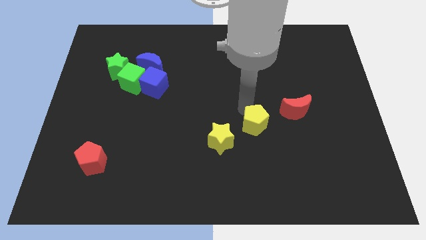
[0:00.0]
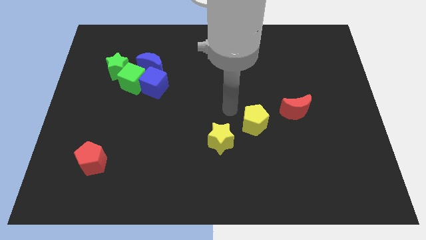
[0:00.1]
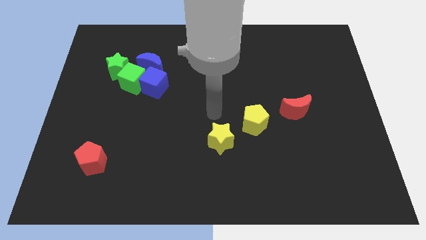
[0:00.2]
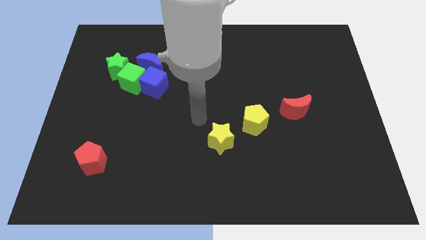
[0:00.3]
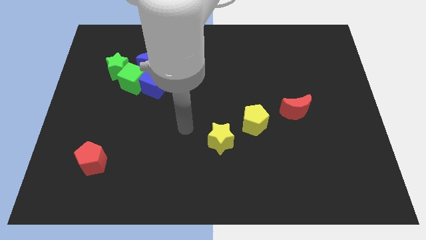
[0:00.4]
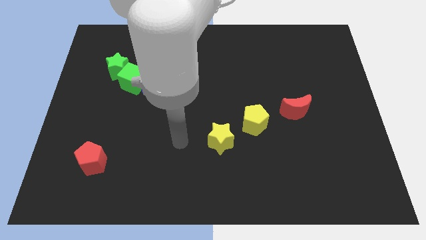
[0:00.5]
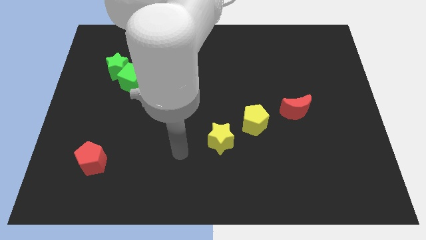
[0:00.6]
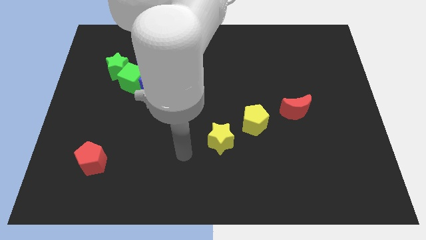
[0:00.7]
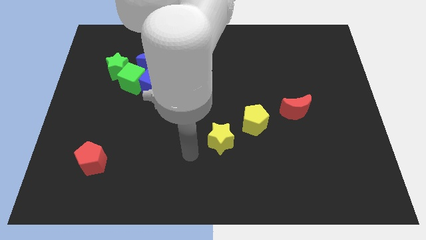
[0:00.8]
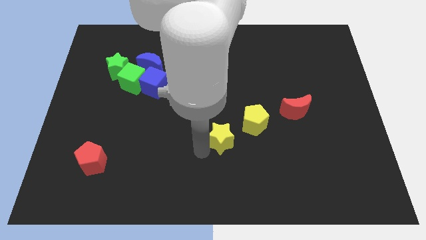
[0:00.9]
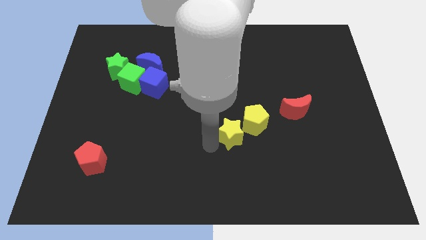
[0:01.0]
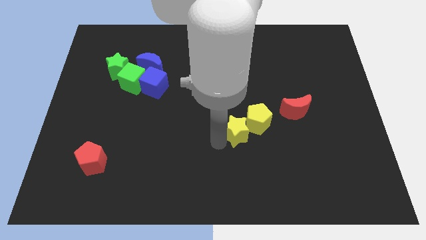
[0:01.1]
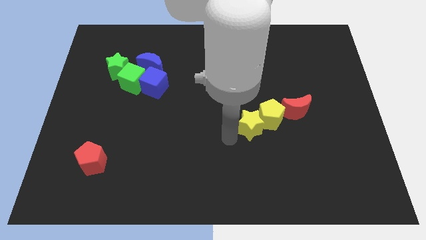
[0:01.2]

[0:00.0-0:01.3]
push the yellow star into the yellow pentagon

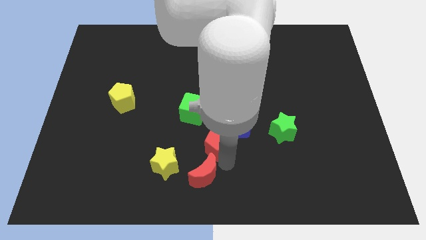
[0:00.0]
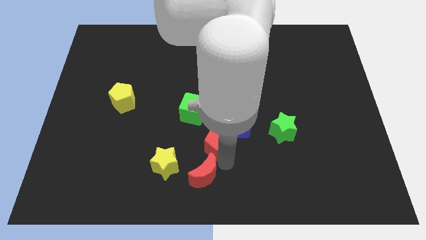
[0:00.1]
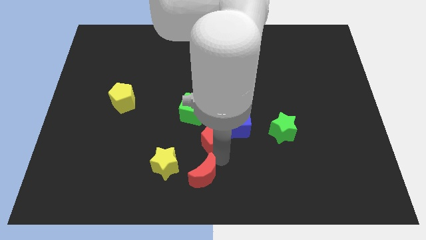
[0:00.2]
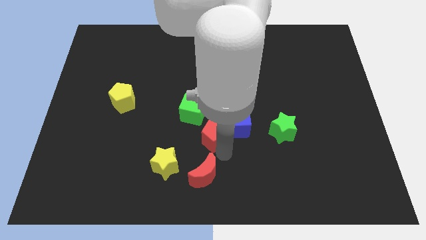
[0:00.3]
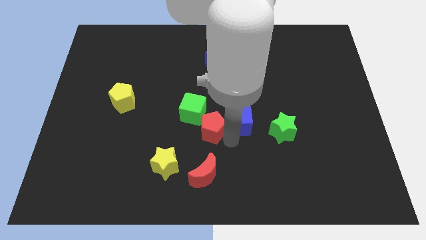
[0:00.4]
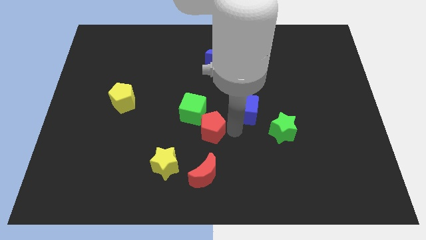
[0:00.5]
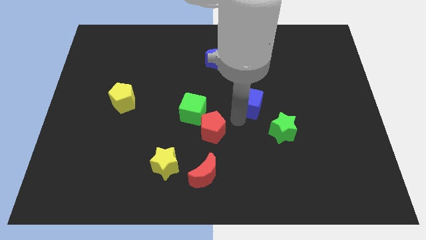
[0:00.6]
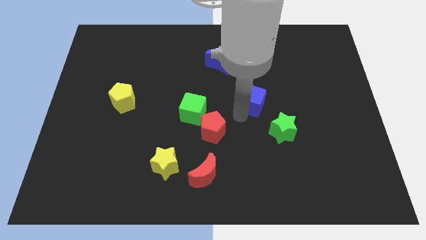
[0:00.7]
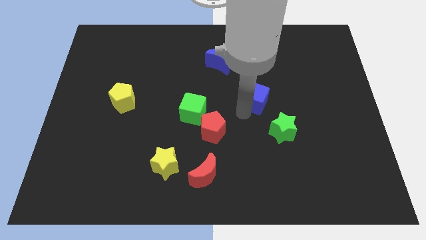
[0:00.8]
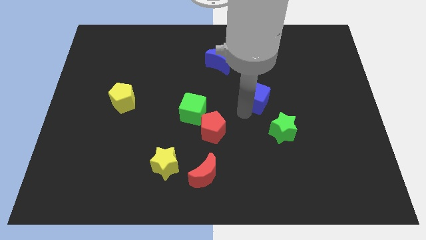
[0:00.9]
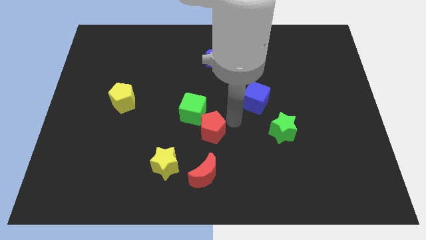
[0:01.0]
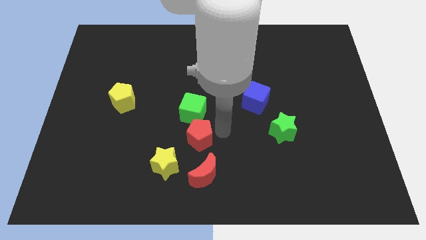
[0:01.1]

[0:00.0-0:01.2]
separate the red pentagon and blue cube

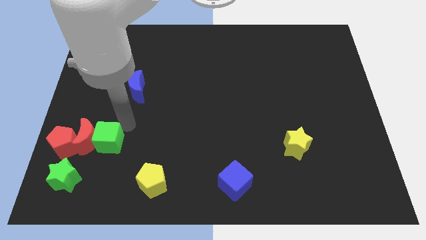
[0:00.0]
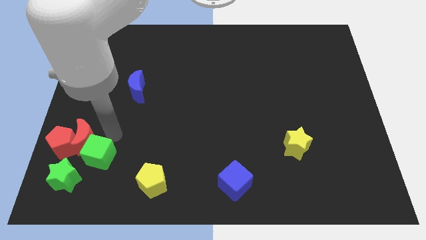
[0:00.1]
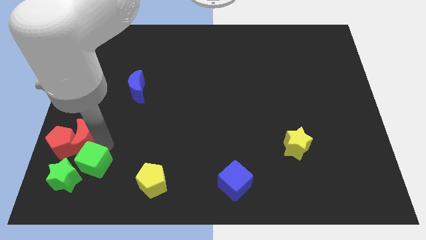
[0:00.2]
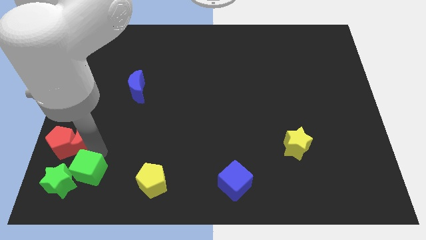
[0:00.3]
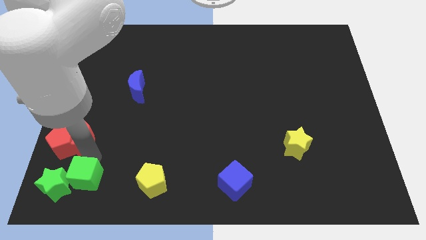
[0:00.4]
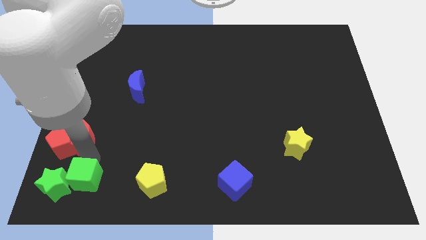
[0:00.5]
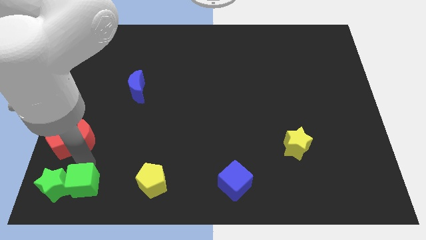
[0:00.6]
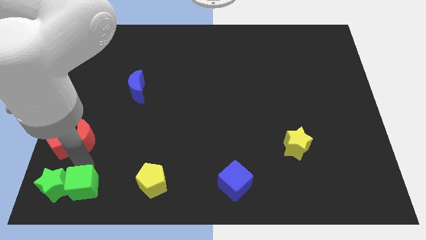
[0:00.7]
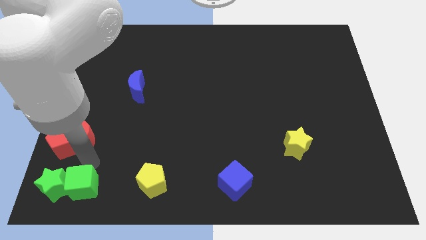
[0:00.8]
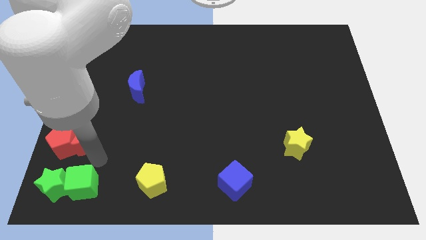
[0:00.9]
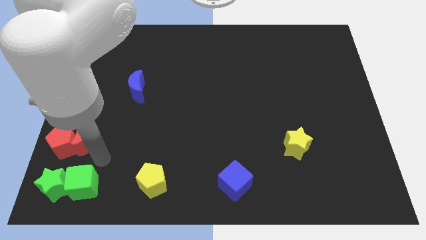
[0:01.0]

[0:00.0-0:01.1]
move the green cube into the green star

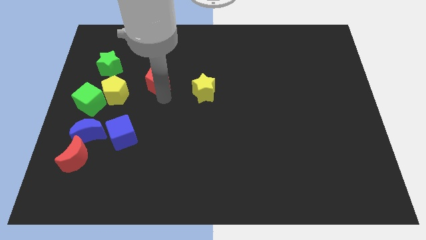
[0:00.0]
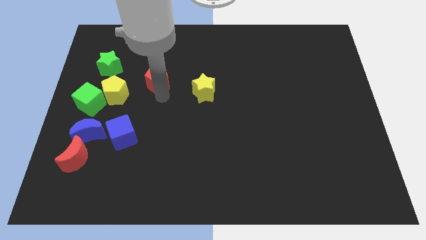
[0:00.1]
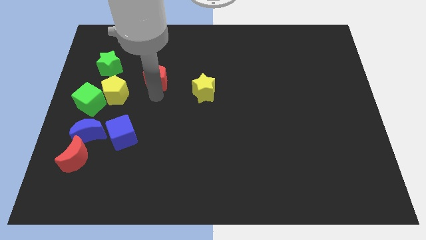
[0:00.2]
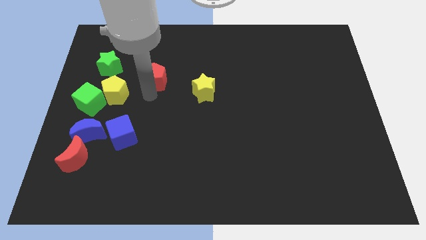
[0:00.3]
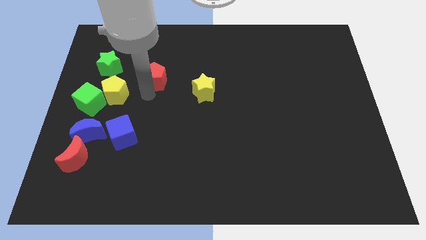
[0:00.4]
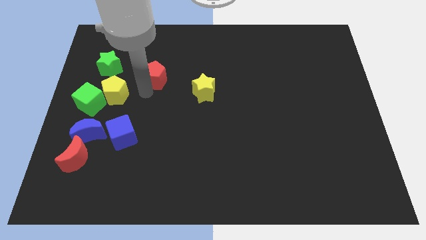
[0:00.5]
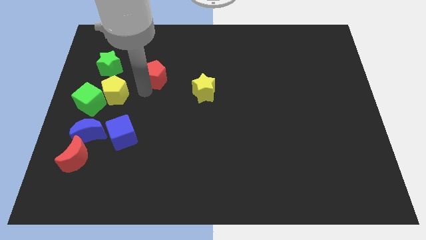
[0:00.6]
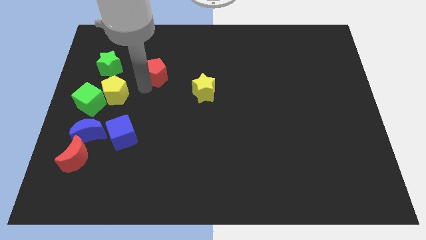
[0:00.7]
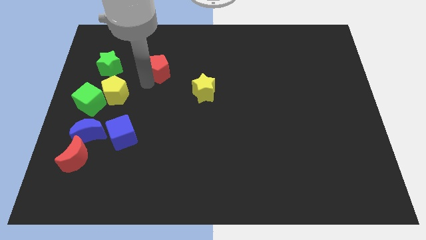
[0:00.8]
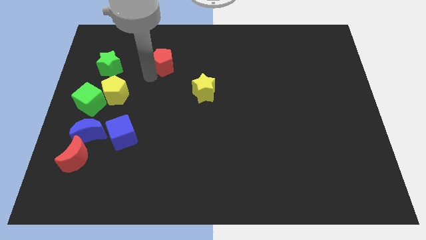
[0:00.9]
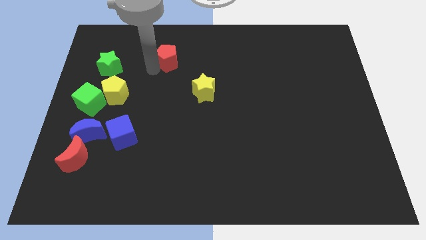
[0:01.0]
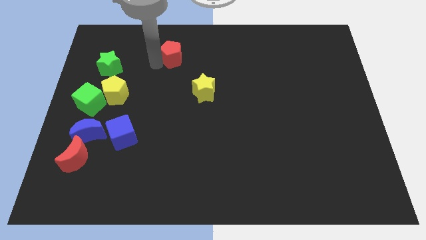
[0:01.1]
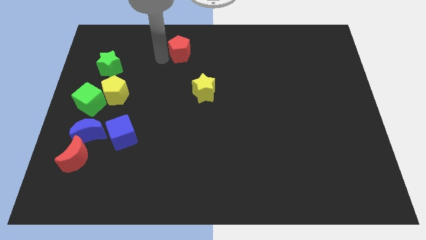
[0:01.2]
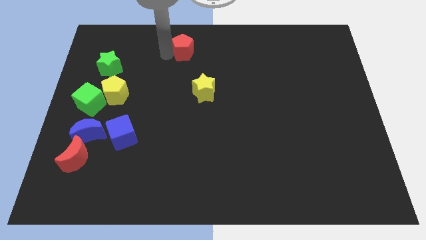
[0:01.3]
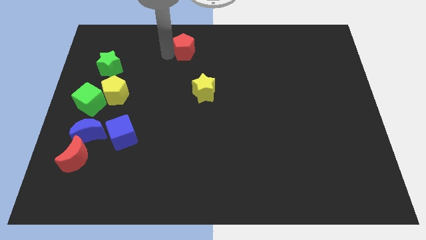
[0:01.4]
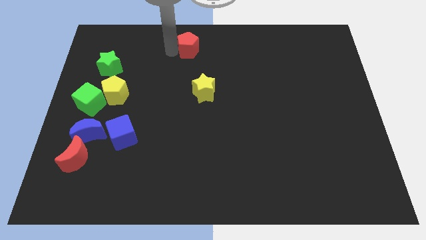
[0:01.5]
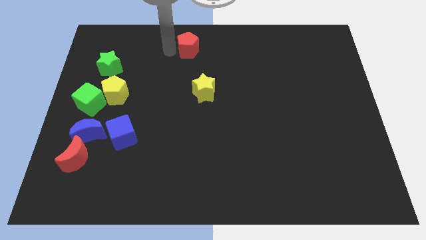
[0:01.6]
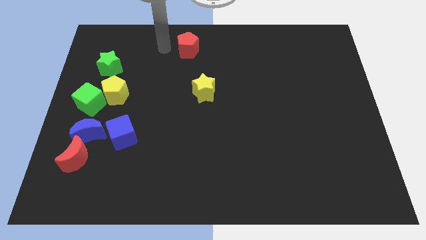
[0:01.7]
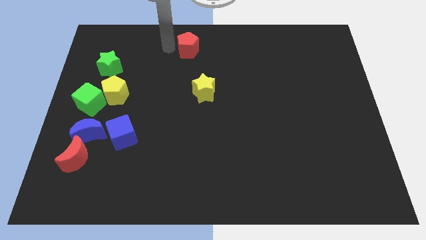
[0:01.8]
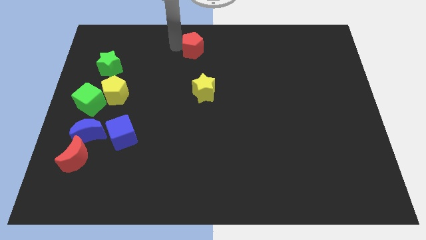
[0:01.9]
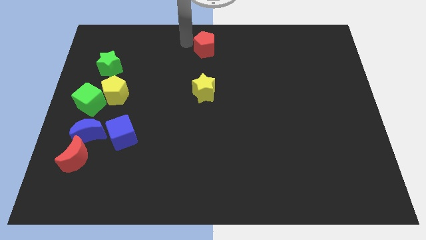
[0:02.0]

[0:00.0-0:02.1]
move the red pentagon to the top of the yellow star

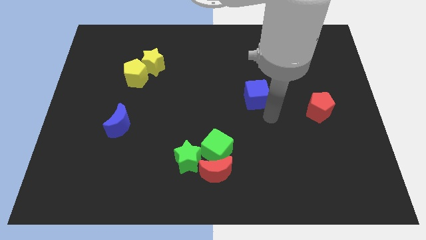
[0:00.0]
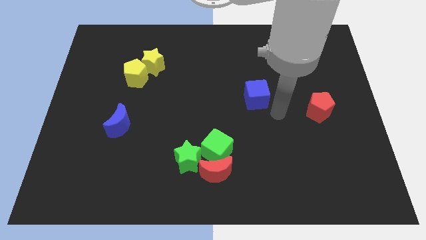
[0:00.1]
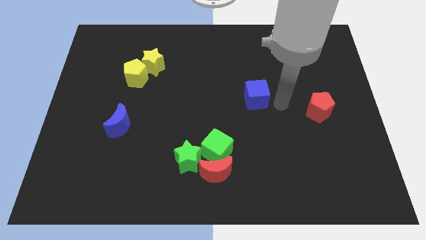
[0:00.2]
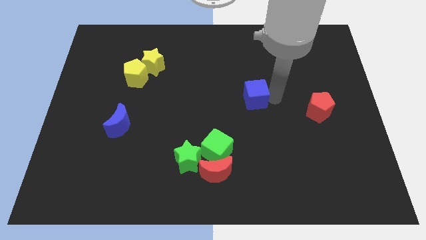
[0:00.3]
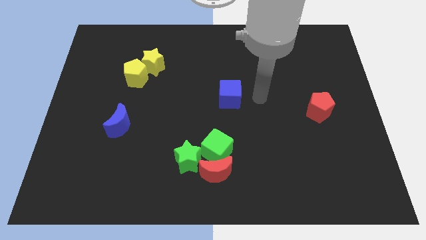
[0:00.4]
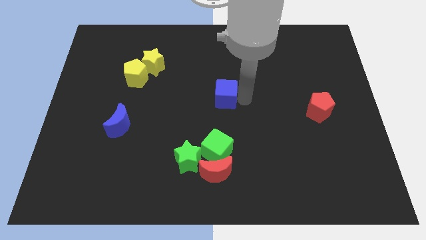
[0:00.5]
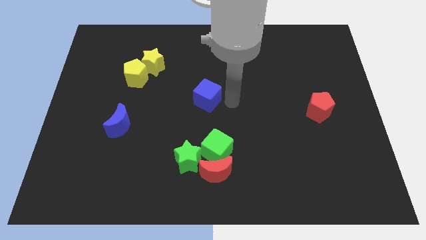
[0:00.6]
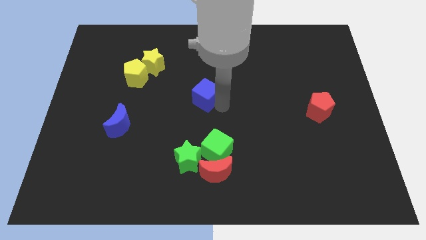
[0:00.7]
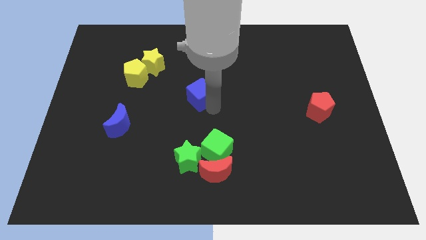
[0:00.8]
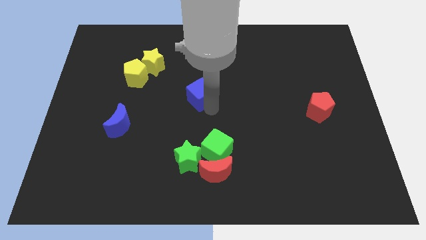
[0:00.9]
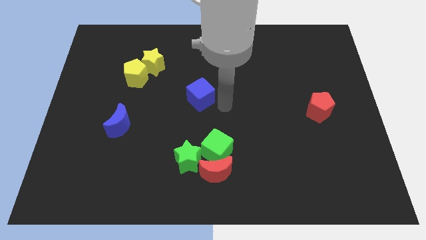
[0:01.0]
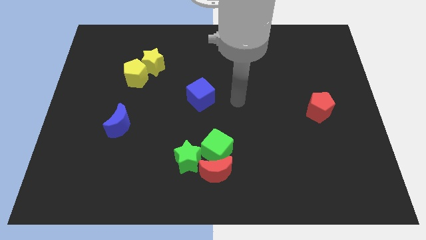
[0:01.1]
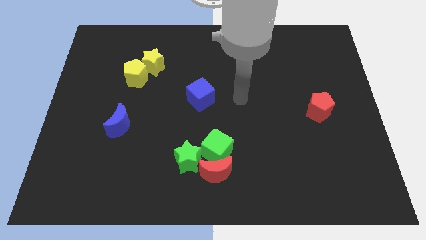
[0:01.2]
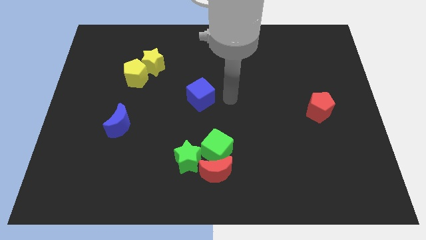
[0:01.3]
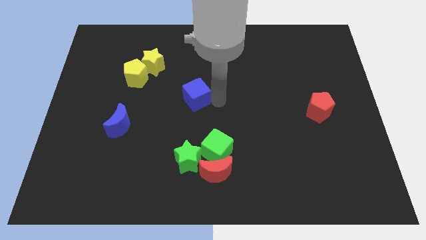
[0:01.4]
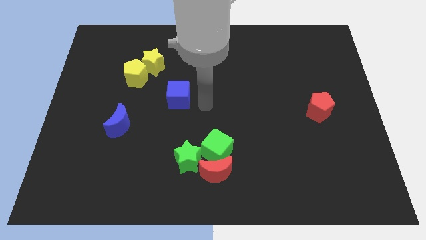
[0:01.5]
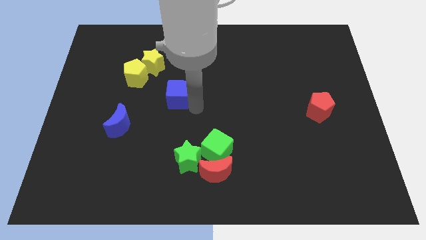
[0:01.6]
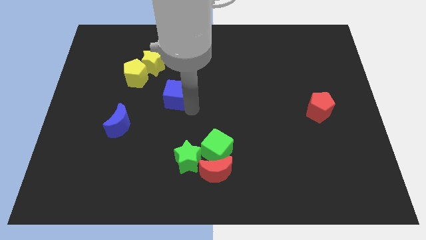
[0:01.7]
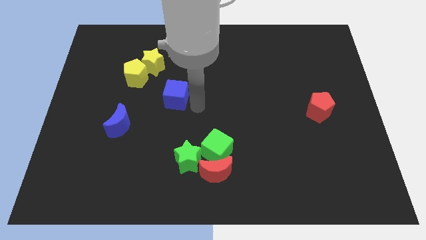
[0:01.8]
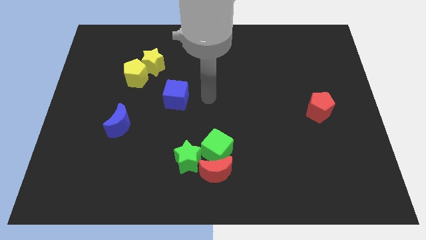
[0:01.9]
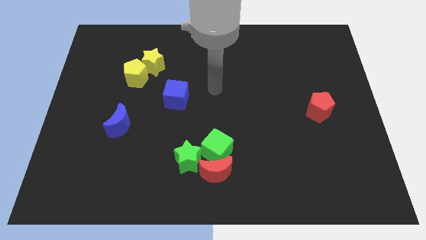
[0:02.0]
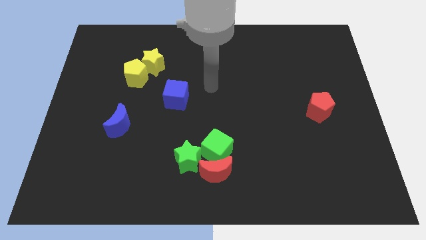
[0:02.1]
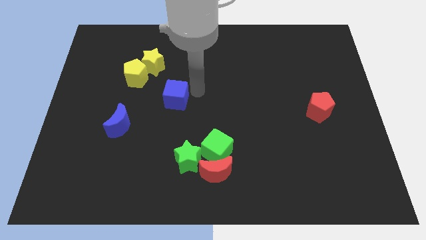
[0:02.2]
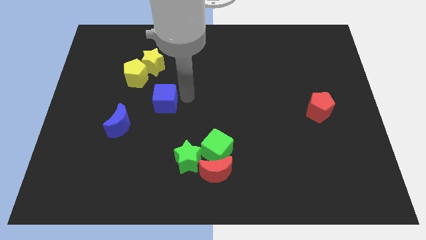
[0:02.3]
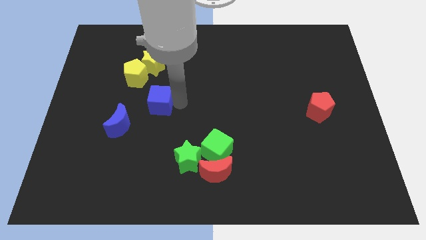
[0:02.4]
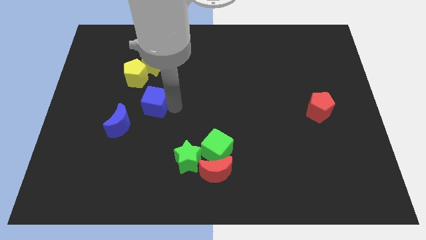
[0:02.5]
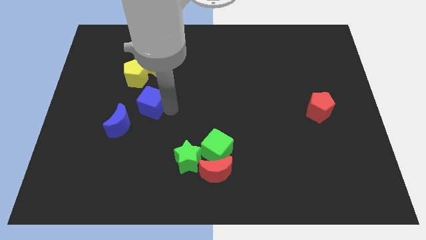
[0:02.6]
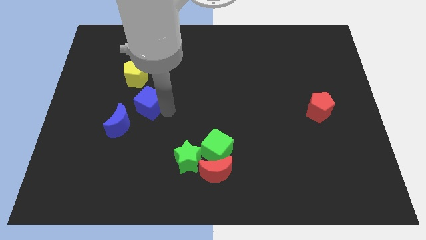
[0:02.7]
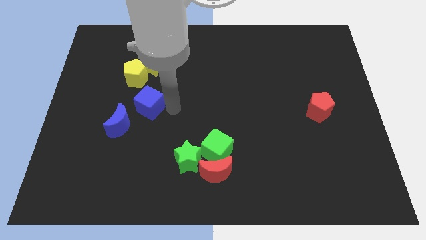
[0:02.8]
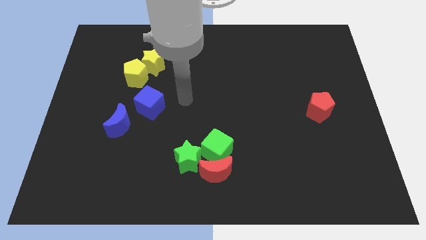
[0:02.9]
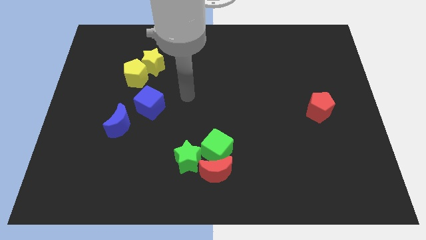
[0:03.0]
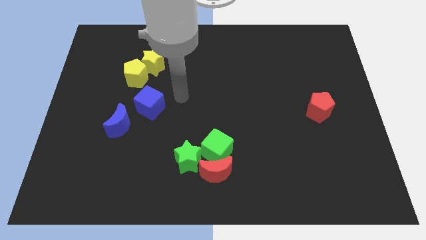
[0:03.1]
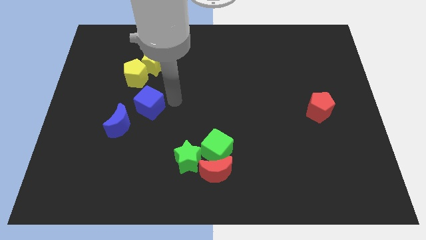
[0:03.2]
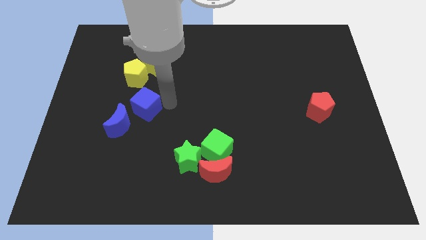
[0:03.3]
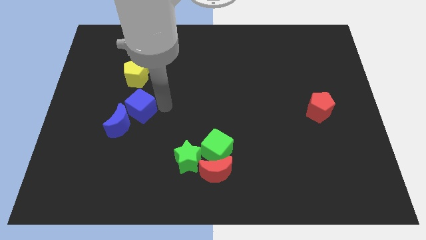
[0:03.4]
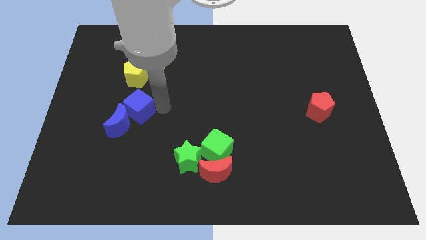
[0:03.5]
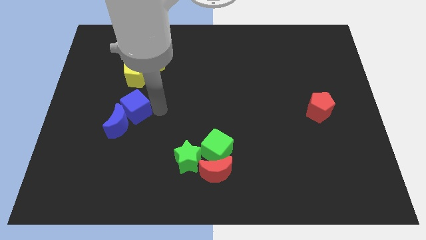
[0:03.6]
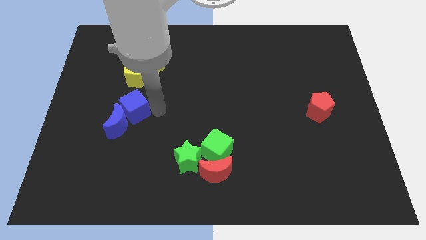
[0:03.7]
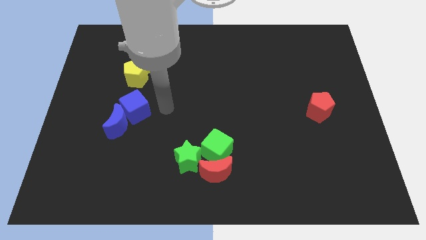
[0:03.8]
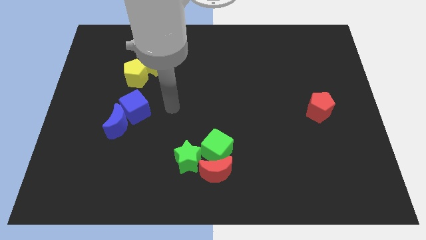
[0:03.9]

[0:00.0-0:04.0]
place the blue cube into the blue moon below the yellow blocks
